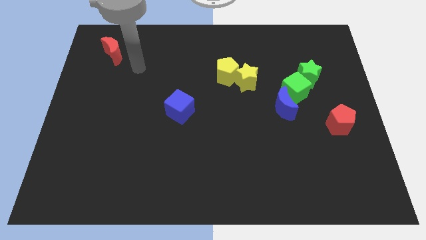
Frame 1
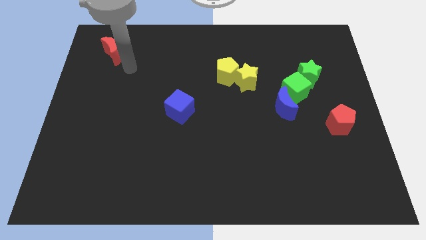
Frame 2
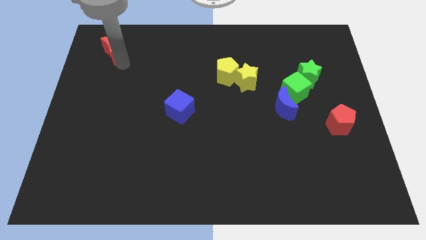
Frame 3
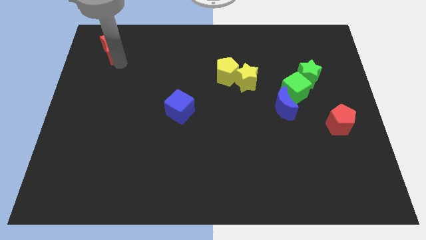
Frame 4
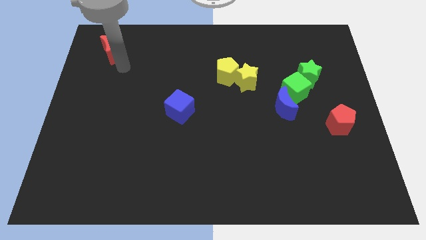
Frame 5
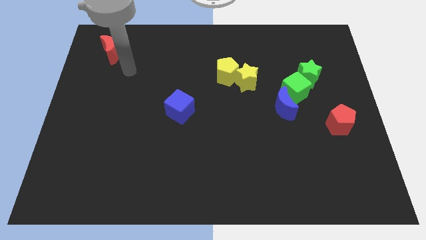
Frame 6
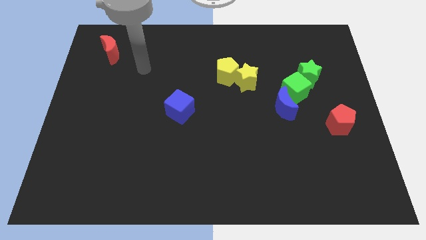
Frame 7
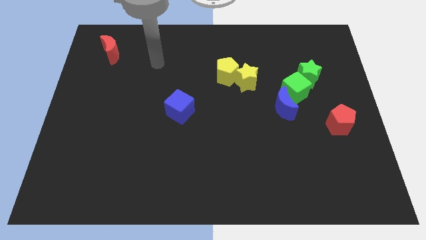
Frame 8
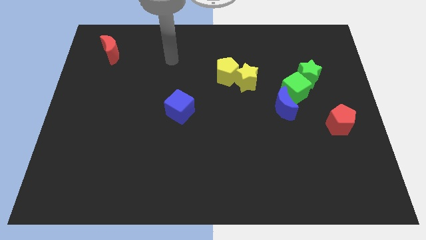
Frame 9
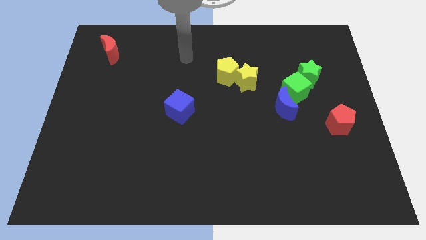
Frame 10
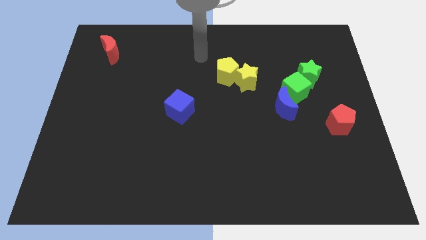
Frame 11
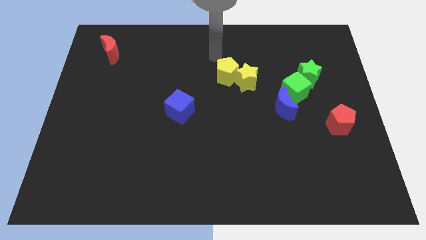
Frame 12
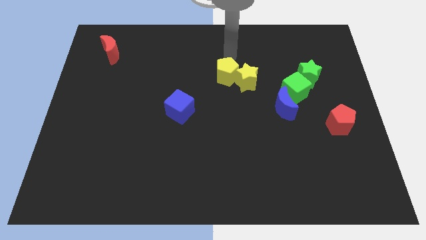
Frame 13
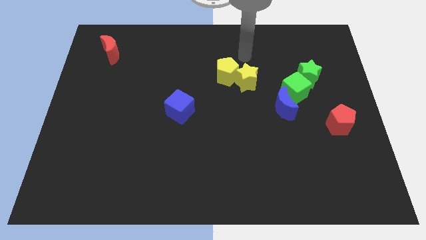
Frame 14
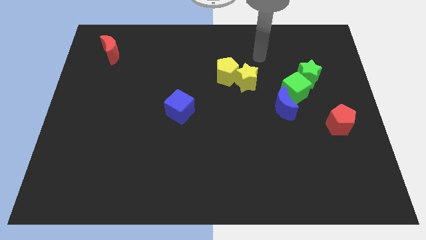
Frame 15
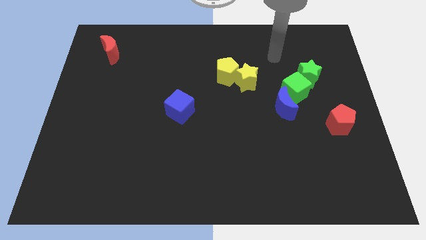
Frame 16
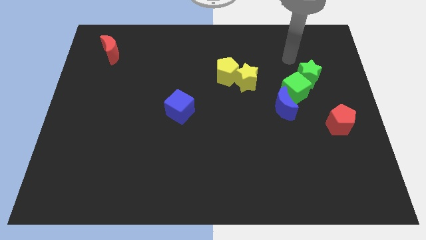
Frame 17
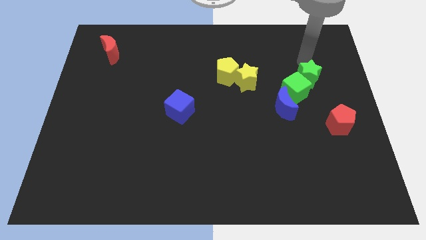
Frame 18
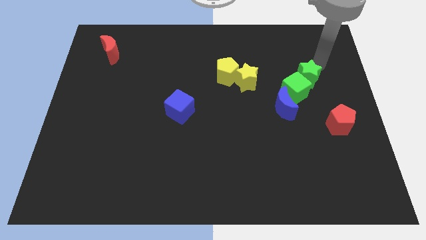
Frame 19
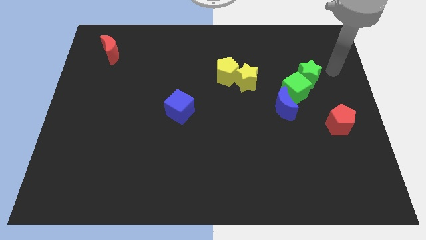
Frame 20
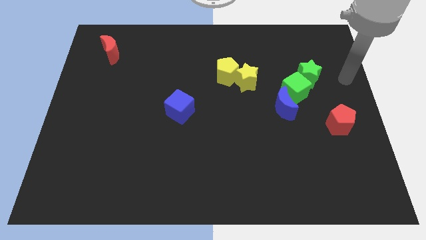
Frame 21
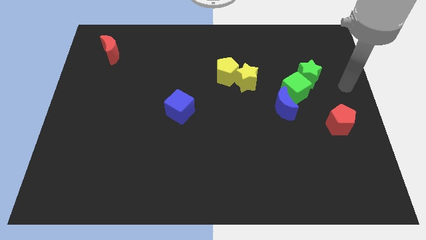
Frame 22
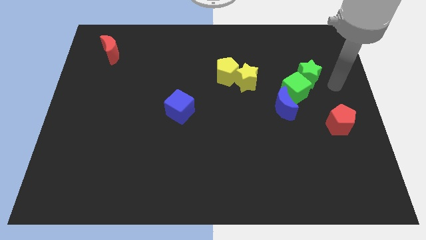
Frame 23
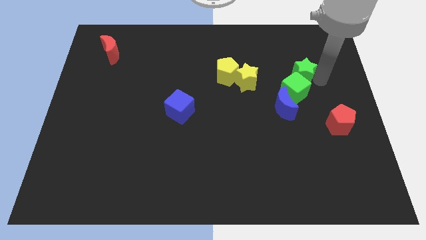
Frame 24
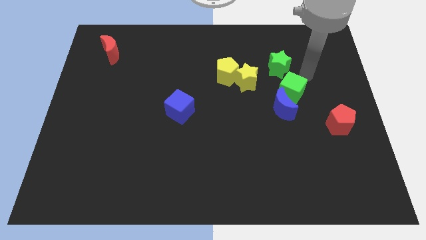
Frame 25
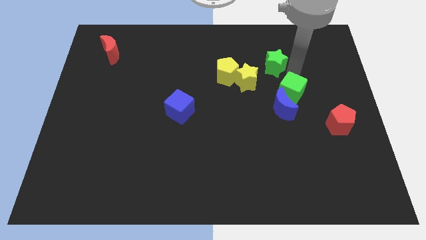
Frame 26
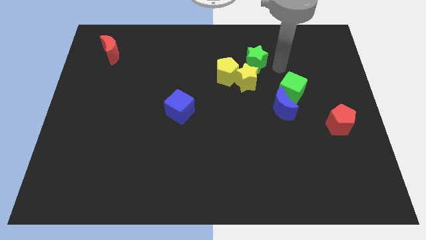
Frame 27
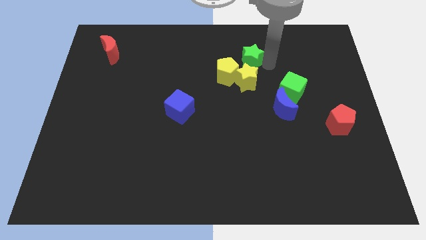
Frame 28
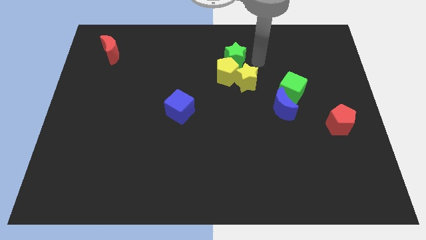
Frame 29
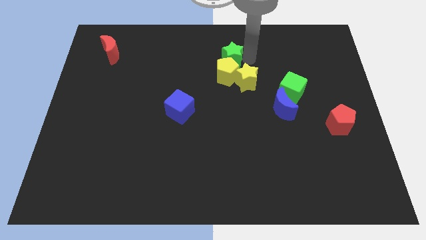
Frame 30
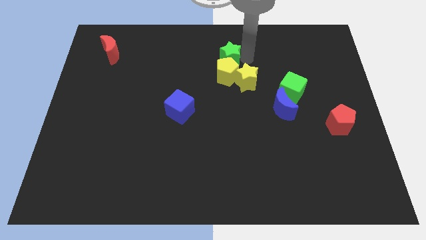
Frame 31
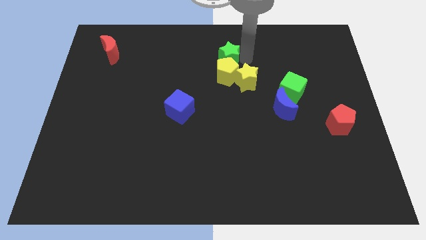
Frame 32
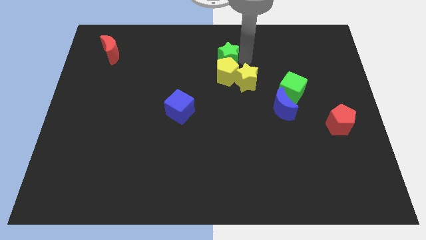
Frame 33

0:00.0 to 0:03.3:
move the green star towards top of yellow pentagon

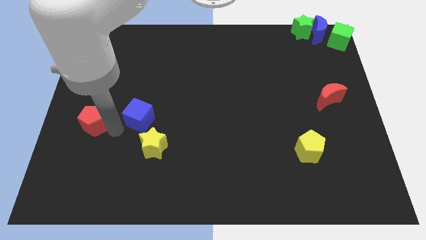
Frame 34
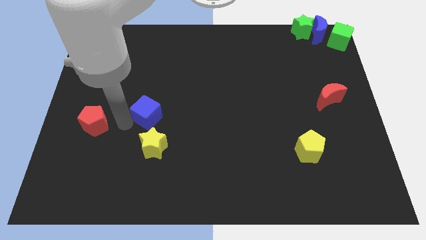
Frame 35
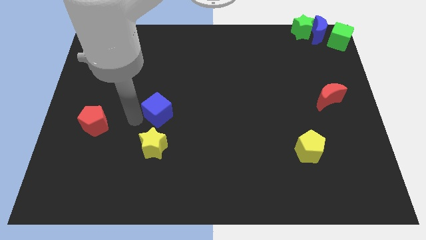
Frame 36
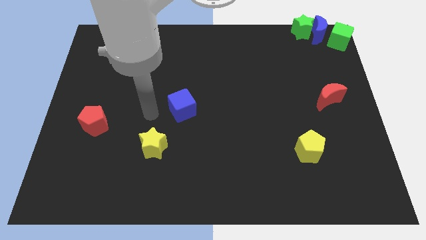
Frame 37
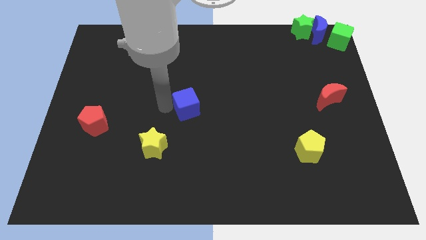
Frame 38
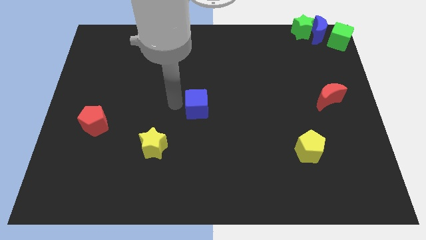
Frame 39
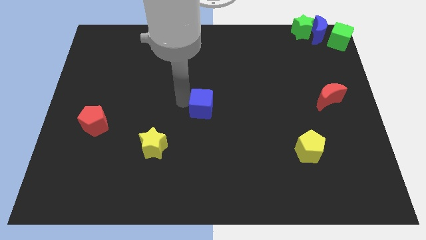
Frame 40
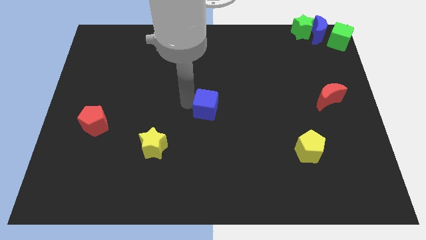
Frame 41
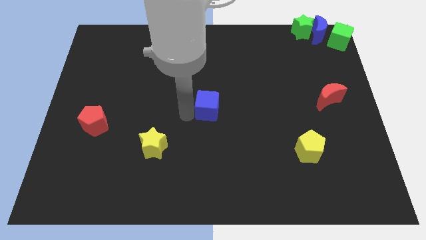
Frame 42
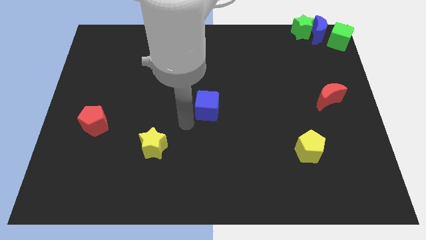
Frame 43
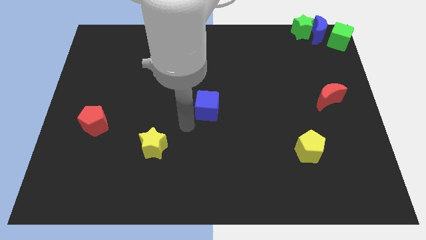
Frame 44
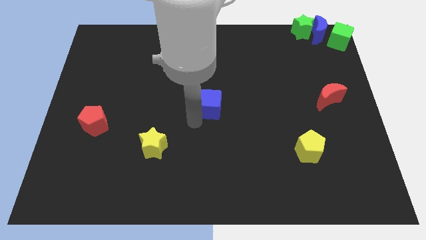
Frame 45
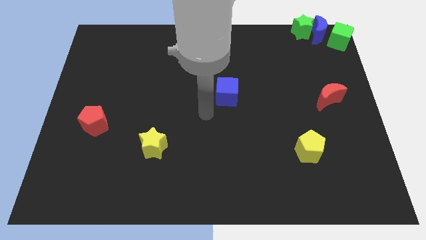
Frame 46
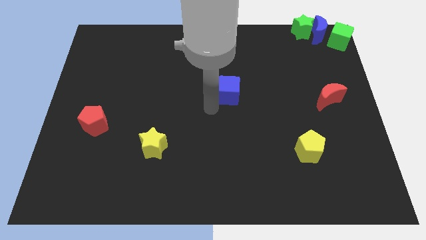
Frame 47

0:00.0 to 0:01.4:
move blue cube to the left of the red crescent

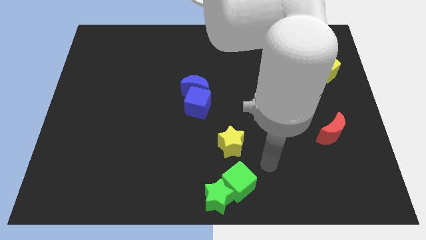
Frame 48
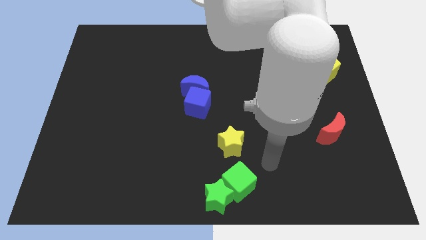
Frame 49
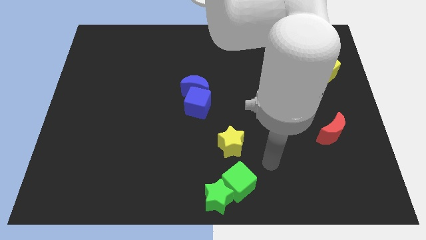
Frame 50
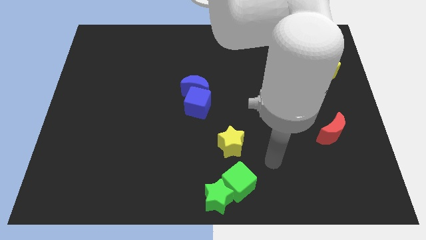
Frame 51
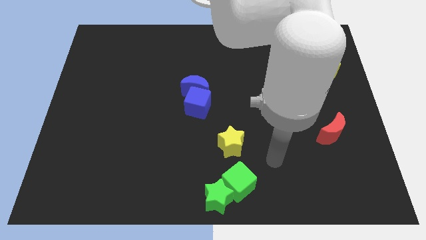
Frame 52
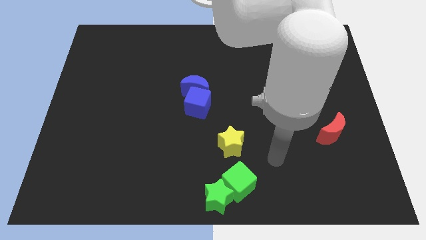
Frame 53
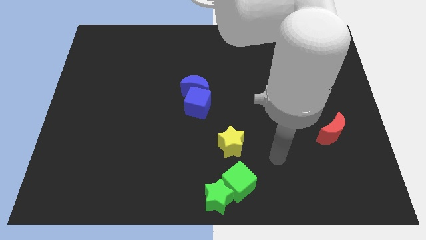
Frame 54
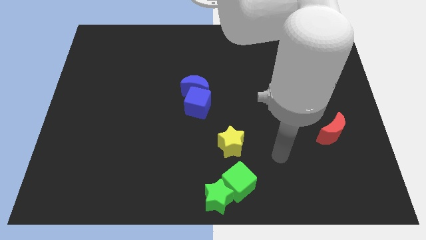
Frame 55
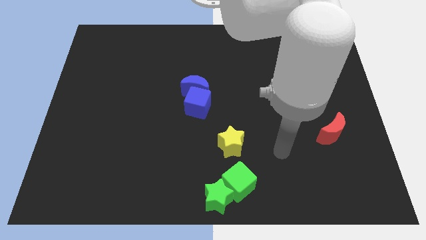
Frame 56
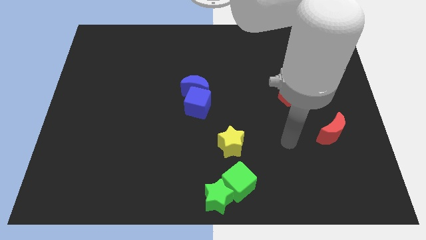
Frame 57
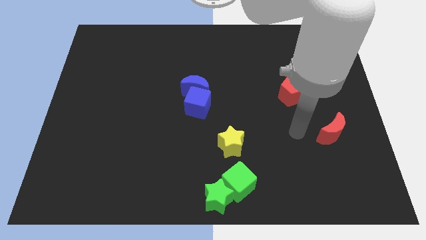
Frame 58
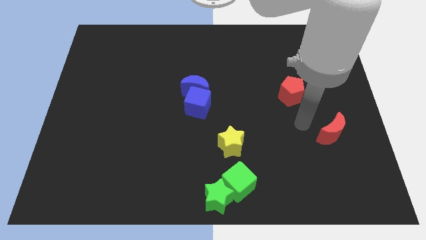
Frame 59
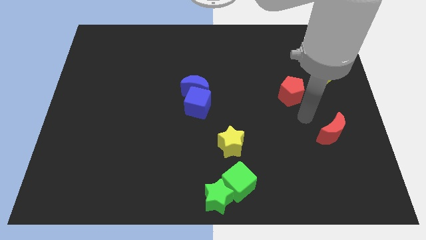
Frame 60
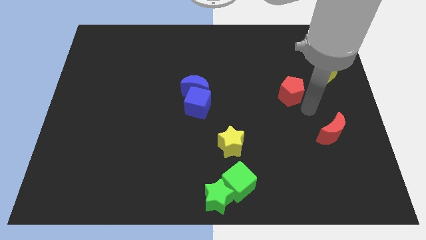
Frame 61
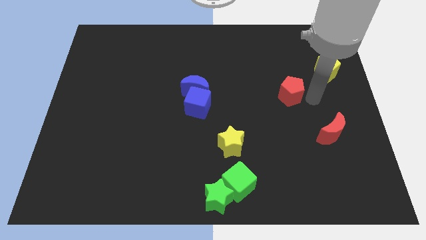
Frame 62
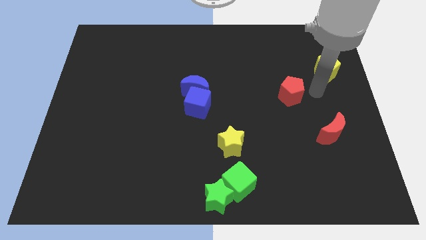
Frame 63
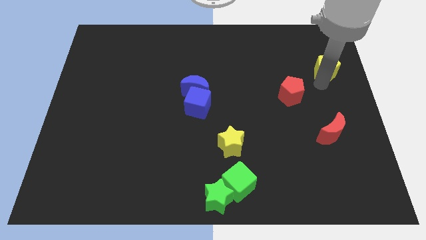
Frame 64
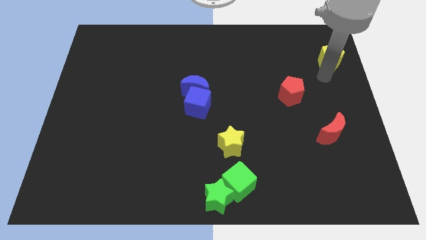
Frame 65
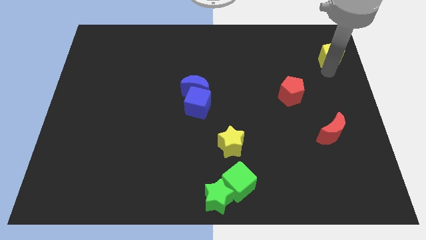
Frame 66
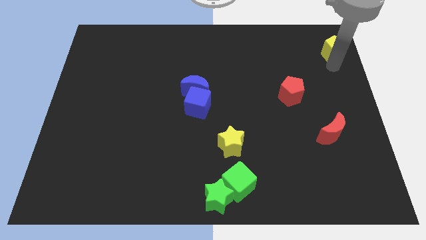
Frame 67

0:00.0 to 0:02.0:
place the arm below the yellow pentagon

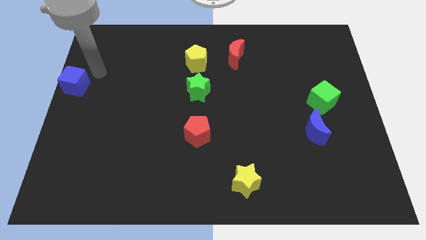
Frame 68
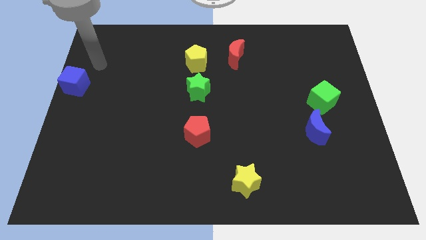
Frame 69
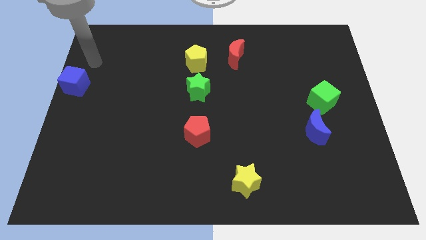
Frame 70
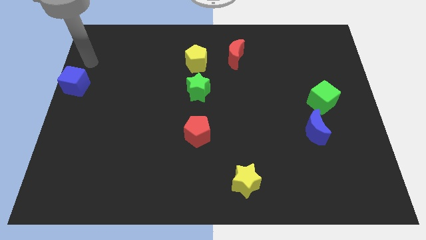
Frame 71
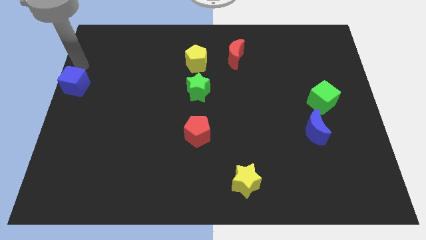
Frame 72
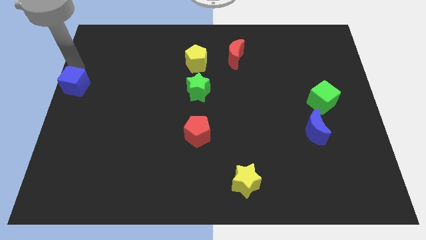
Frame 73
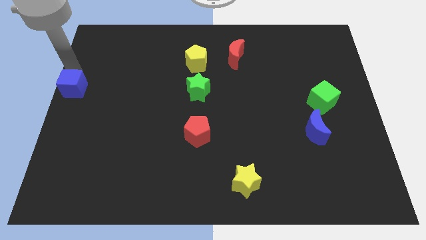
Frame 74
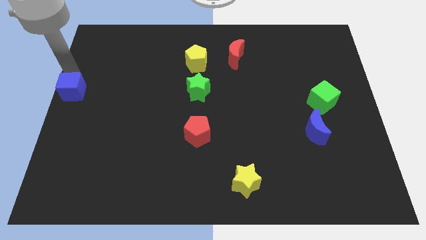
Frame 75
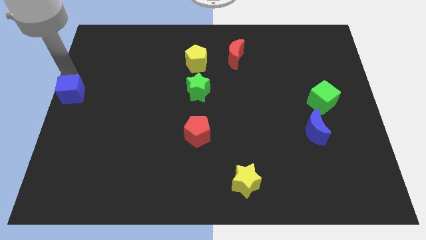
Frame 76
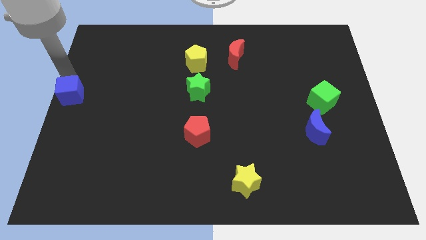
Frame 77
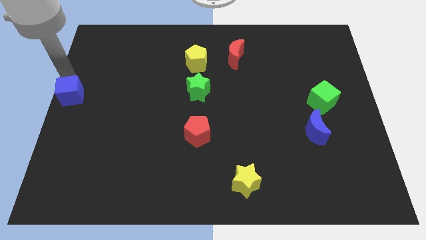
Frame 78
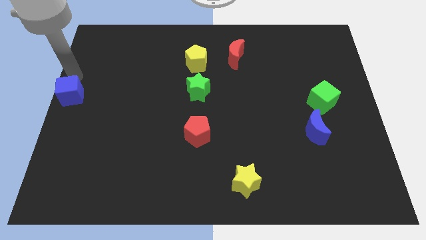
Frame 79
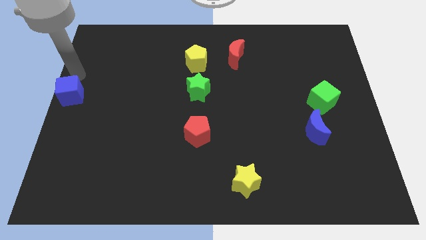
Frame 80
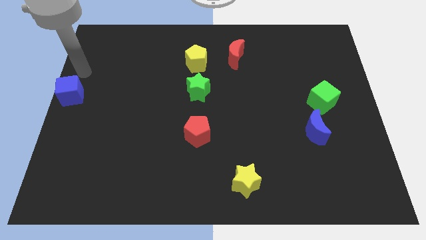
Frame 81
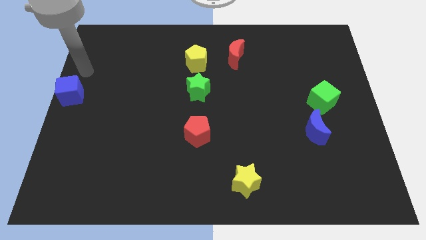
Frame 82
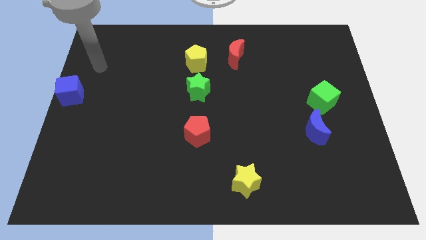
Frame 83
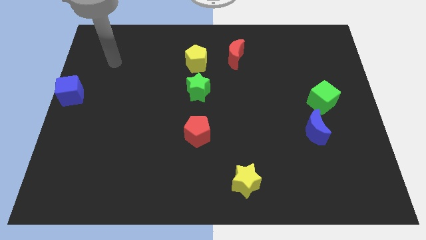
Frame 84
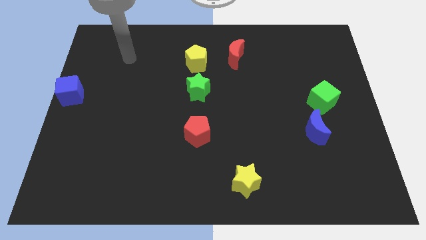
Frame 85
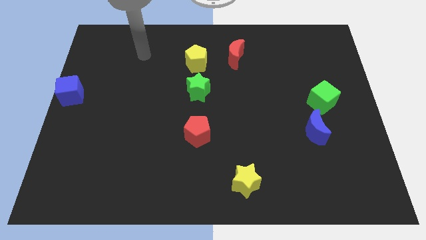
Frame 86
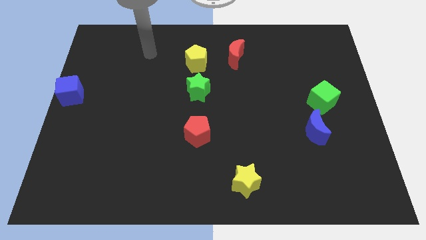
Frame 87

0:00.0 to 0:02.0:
move the blue cube slightly down

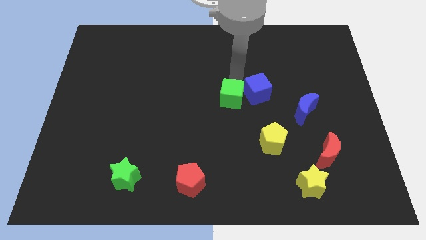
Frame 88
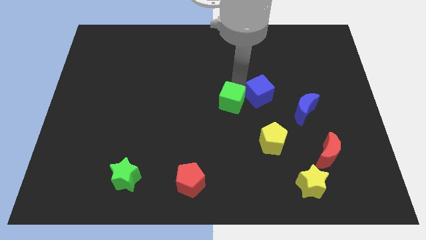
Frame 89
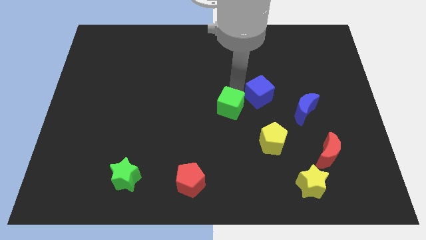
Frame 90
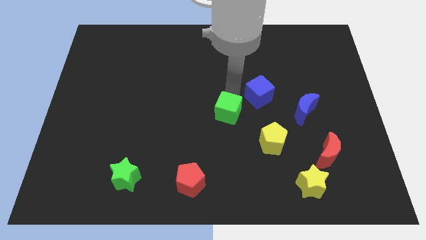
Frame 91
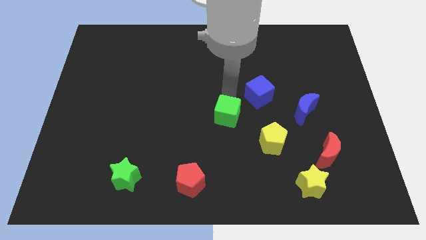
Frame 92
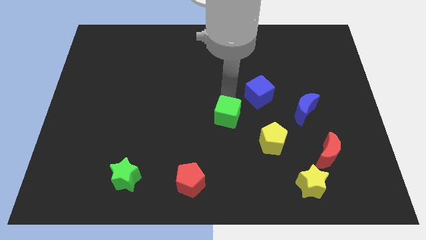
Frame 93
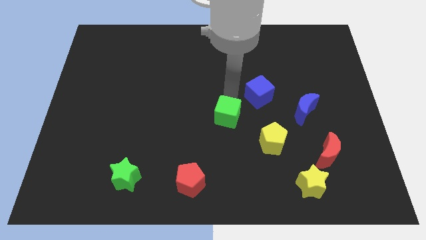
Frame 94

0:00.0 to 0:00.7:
slightly push the green cube towards the bottom center
